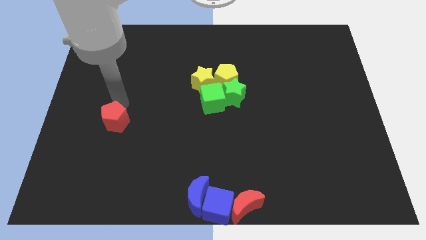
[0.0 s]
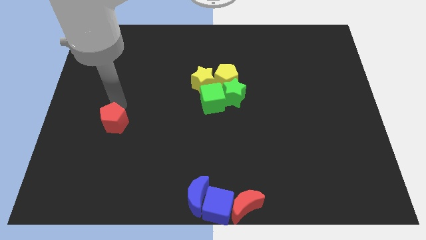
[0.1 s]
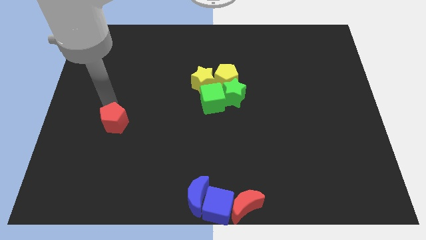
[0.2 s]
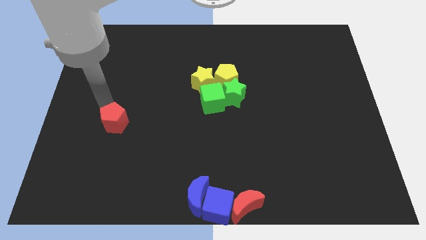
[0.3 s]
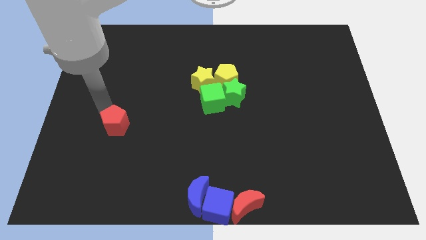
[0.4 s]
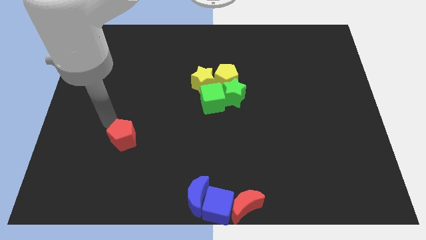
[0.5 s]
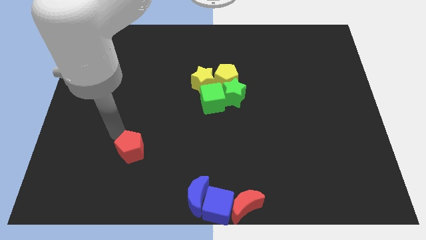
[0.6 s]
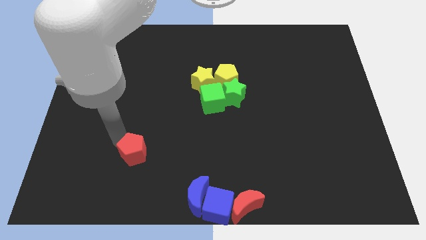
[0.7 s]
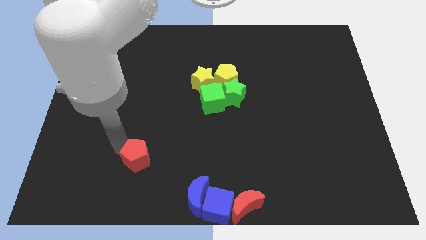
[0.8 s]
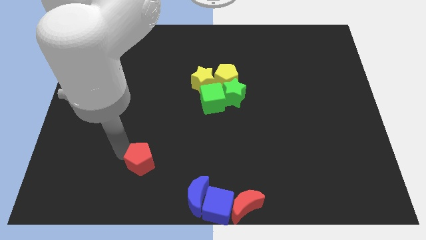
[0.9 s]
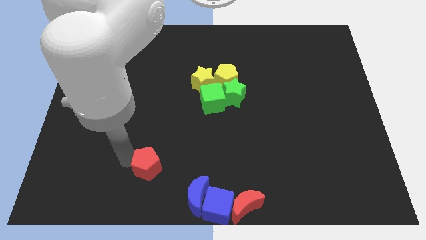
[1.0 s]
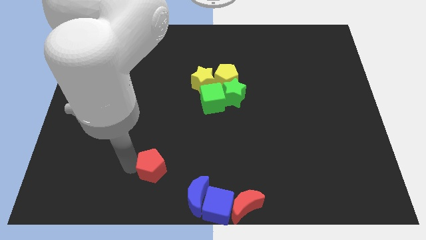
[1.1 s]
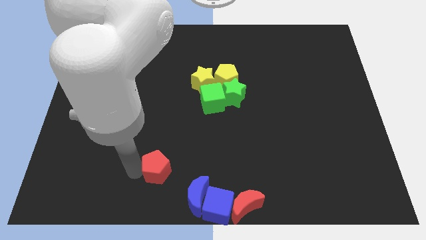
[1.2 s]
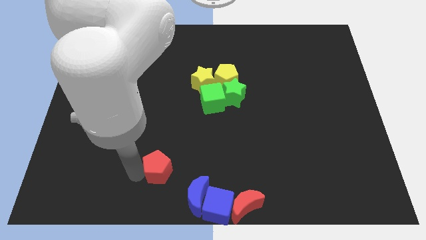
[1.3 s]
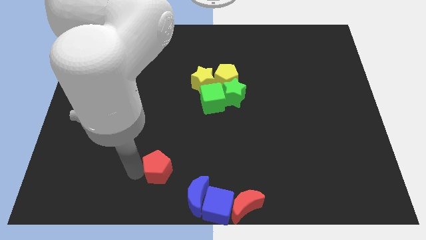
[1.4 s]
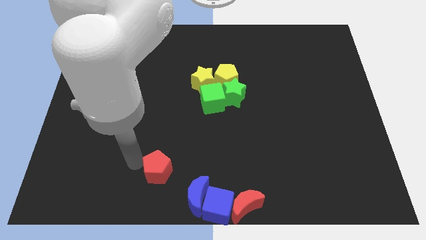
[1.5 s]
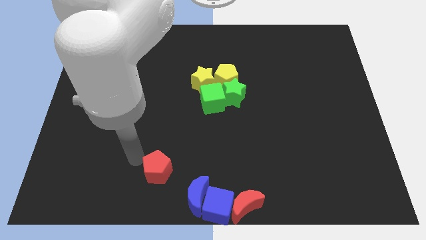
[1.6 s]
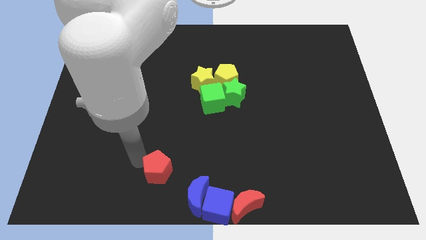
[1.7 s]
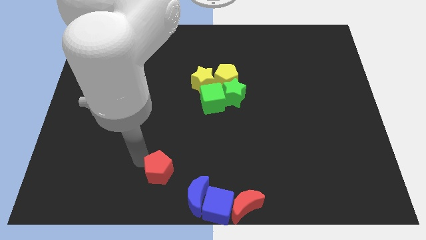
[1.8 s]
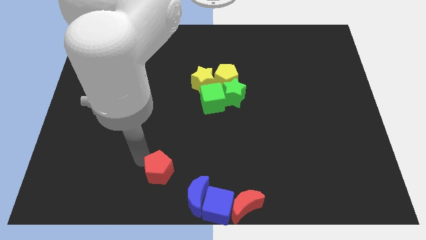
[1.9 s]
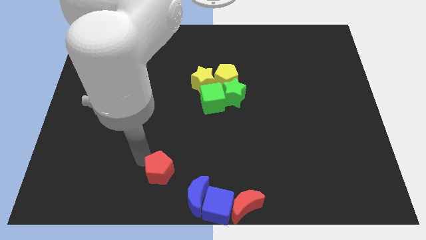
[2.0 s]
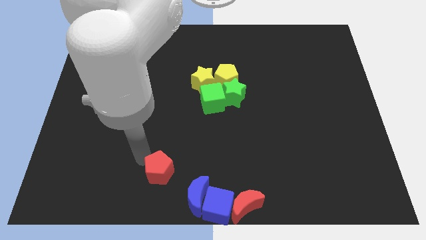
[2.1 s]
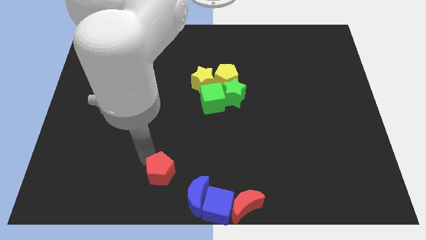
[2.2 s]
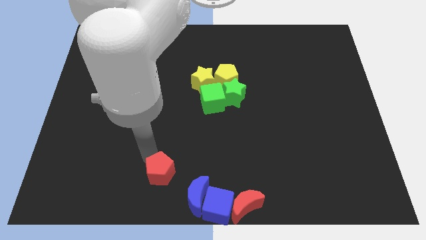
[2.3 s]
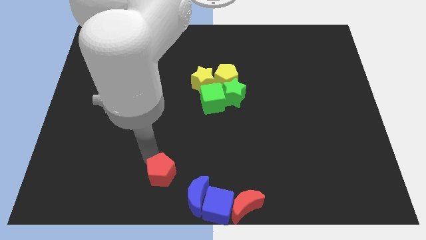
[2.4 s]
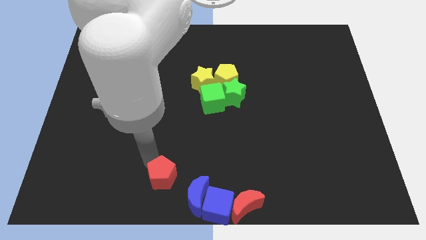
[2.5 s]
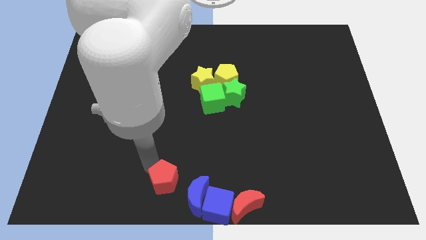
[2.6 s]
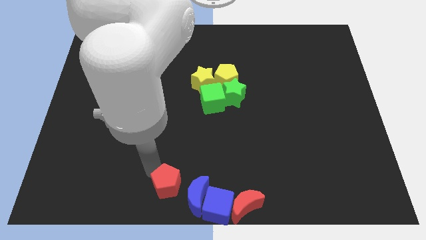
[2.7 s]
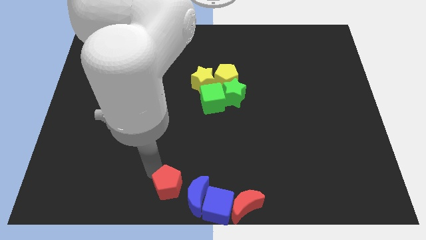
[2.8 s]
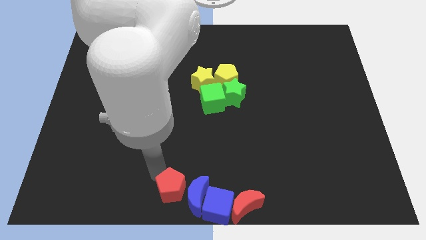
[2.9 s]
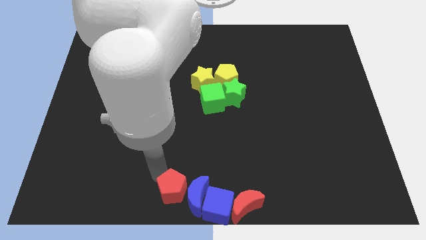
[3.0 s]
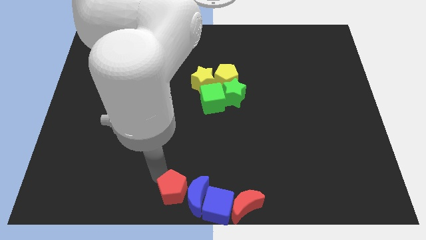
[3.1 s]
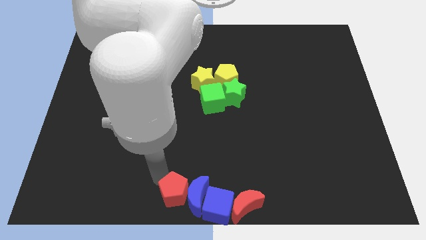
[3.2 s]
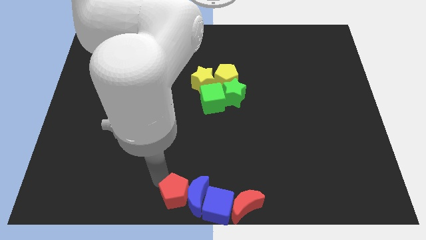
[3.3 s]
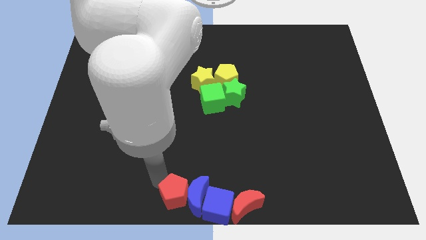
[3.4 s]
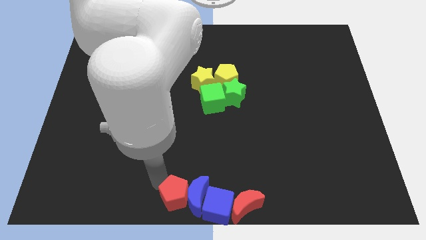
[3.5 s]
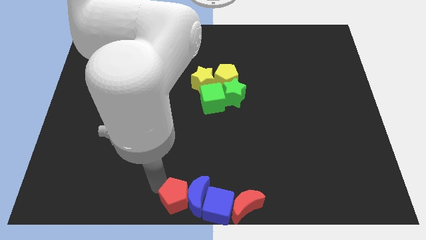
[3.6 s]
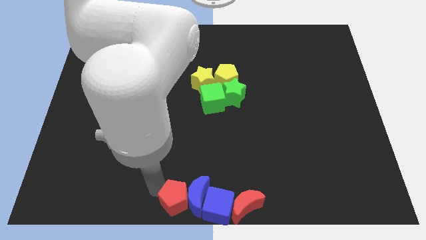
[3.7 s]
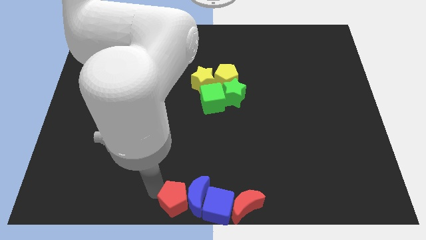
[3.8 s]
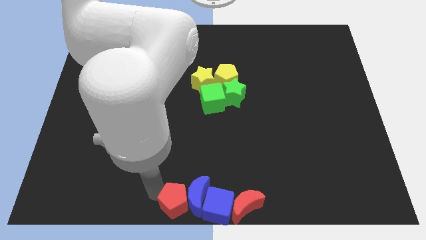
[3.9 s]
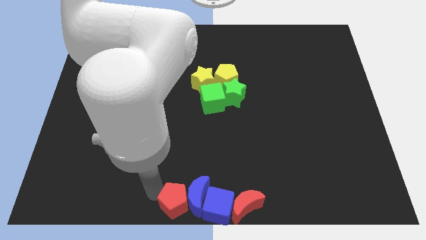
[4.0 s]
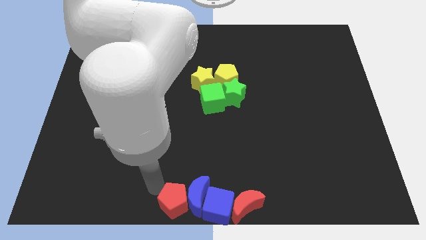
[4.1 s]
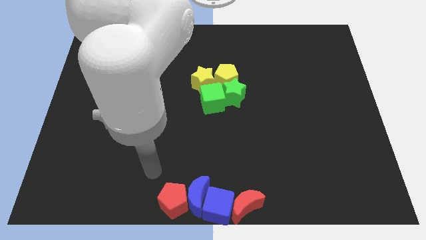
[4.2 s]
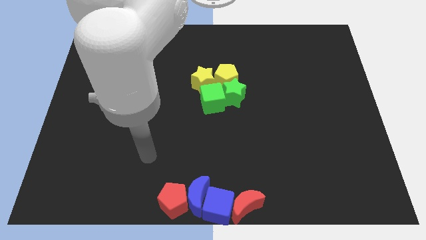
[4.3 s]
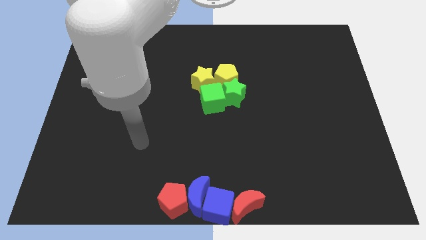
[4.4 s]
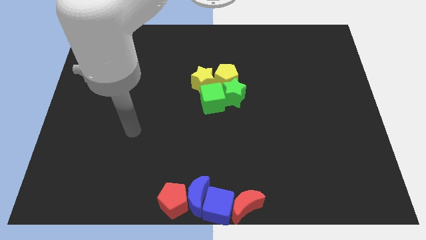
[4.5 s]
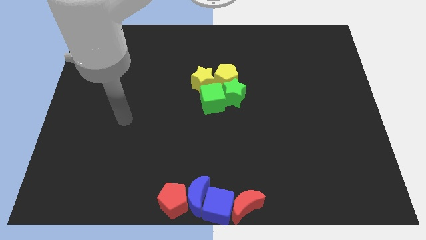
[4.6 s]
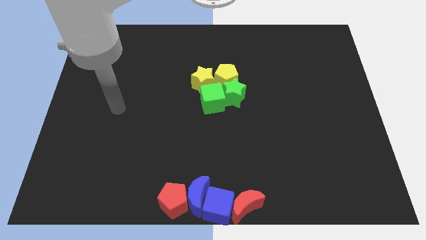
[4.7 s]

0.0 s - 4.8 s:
place the red pentagon close to the group of blue blocks

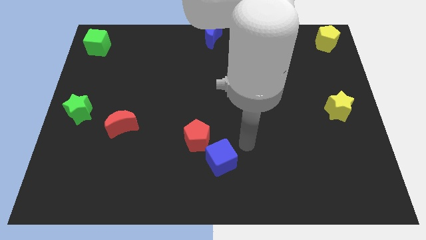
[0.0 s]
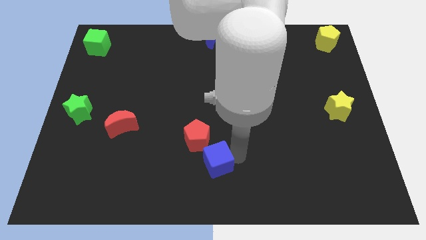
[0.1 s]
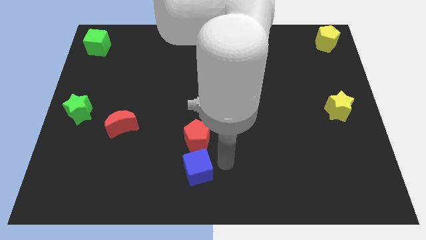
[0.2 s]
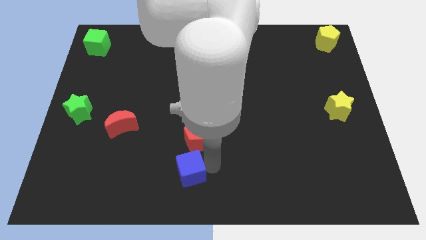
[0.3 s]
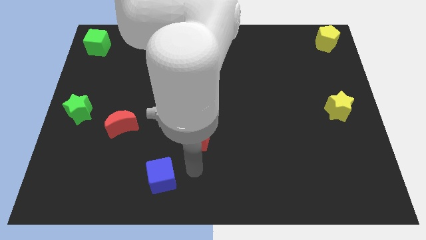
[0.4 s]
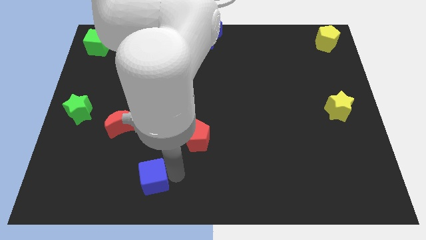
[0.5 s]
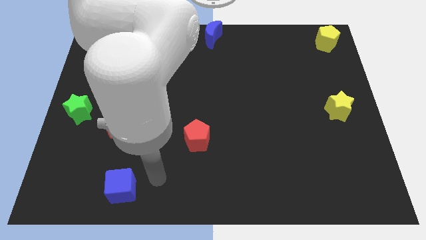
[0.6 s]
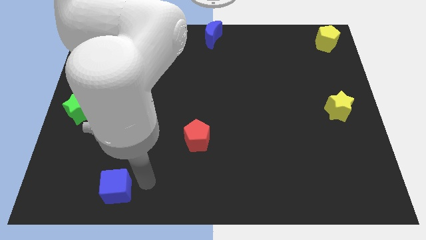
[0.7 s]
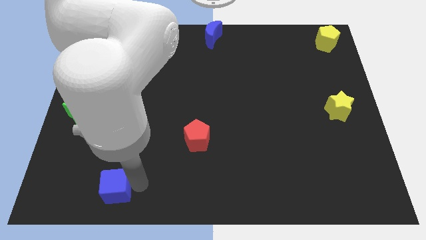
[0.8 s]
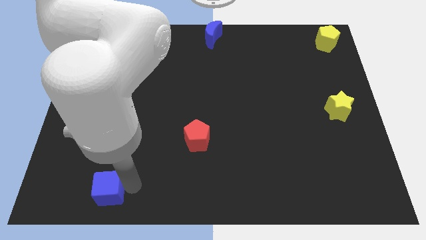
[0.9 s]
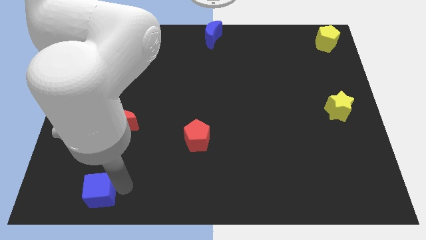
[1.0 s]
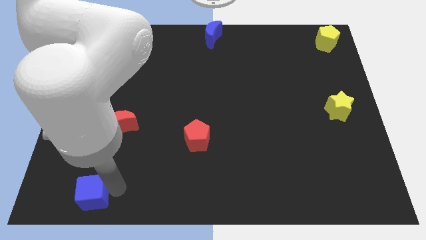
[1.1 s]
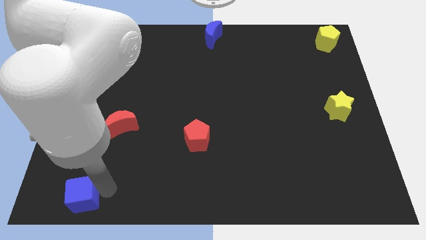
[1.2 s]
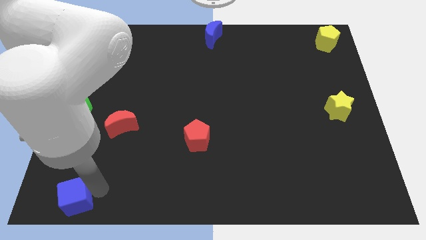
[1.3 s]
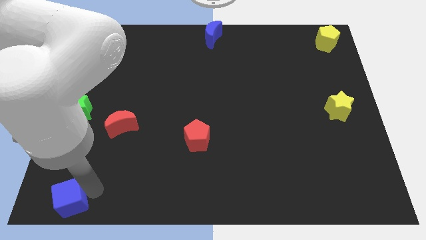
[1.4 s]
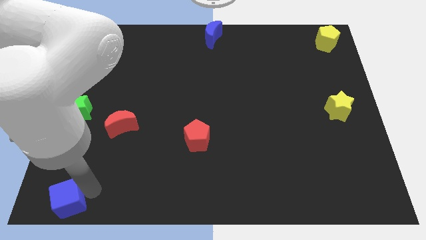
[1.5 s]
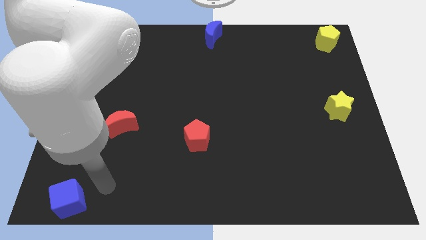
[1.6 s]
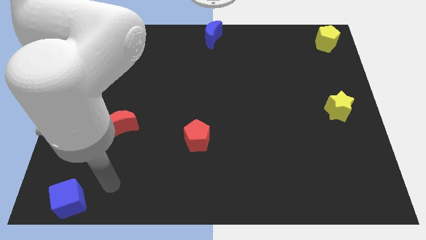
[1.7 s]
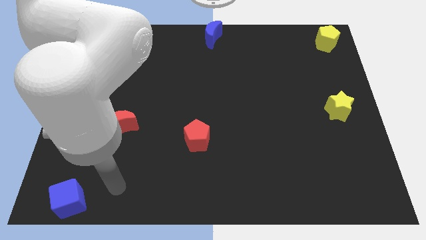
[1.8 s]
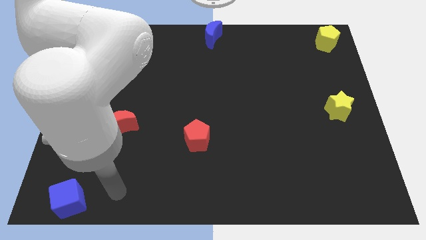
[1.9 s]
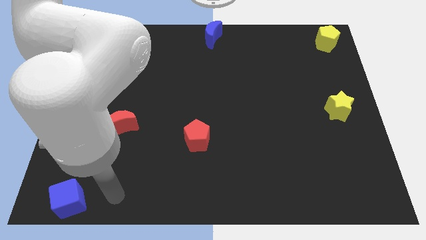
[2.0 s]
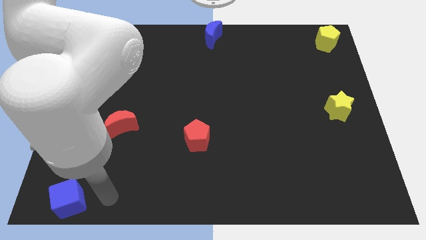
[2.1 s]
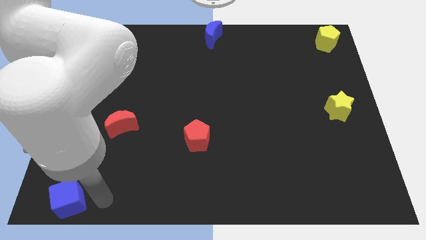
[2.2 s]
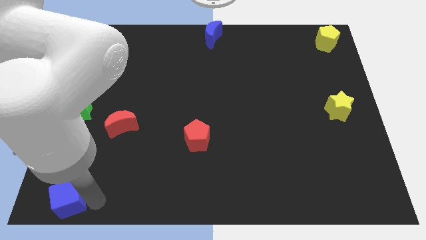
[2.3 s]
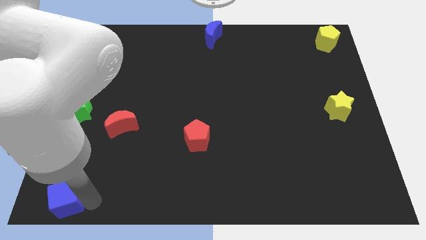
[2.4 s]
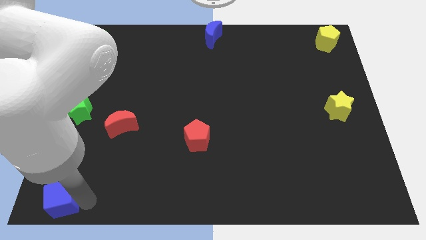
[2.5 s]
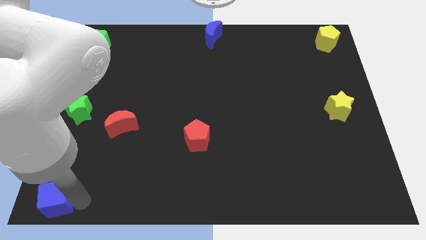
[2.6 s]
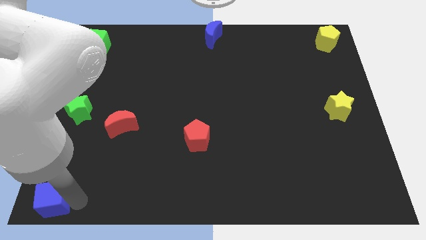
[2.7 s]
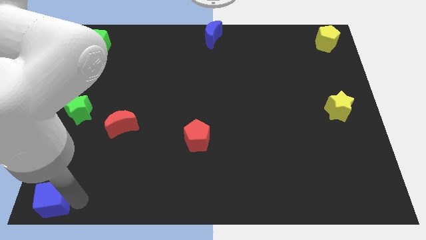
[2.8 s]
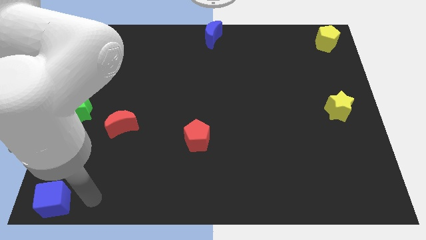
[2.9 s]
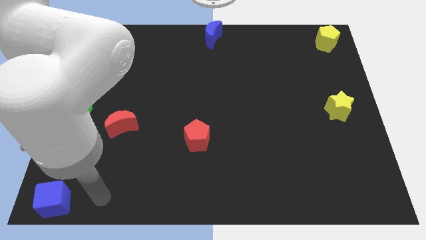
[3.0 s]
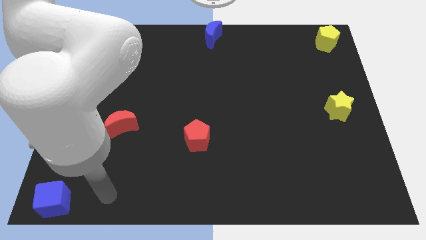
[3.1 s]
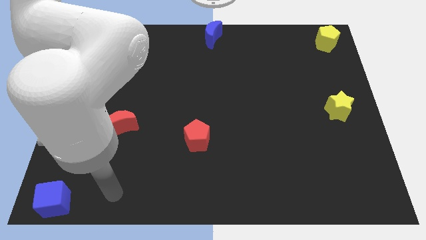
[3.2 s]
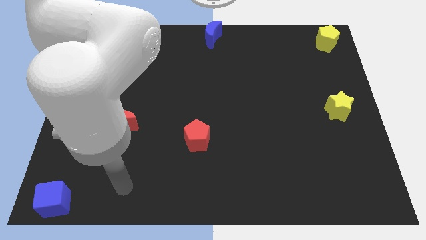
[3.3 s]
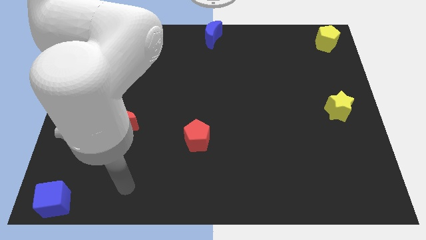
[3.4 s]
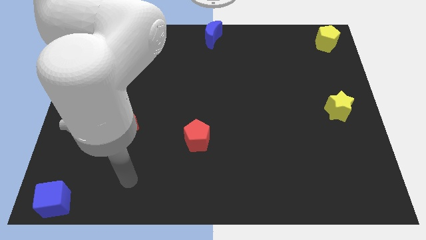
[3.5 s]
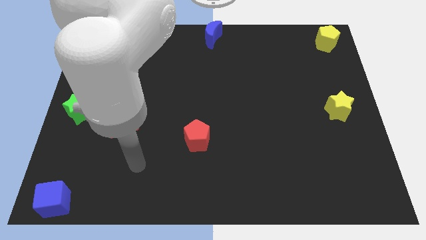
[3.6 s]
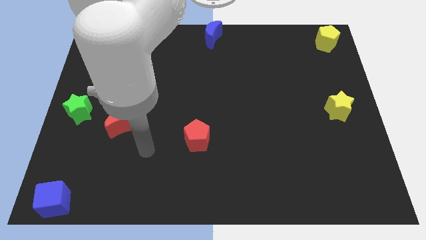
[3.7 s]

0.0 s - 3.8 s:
place blue cube at the bottom left corner of the board

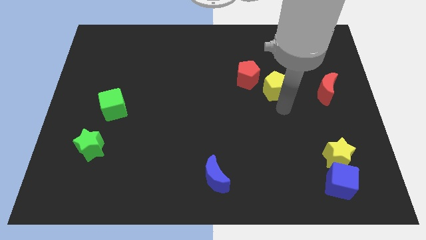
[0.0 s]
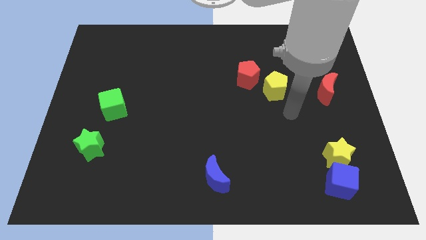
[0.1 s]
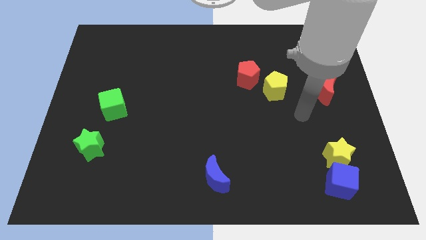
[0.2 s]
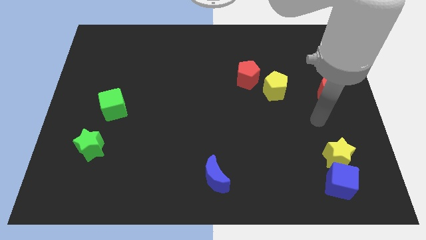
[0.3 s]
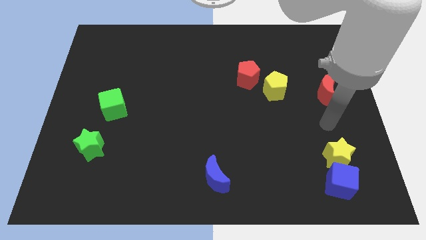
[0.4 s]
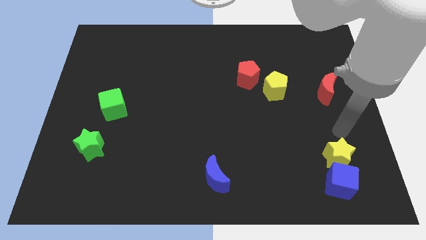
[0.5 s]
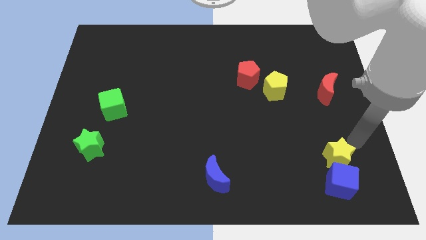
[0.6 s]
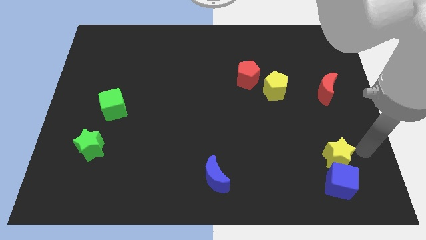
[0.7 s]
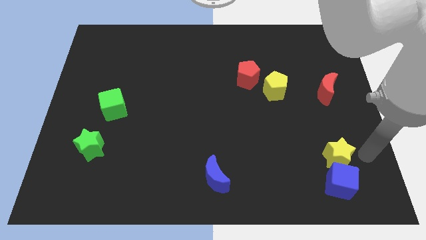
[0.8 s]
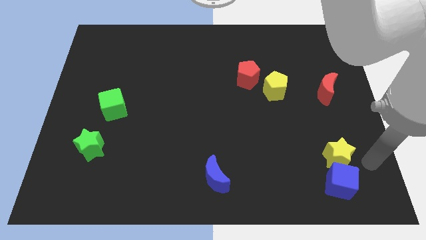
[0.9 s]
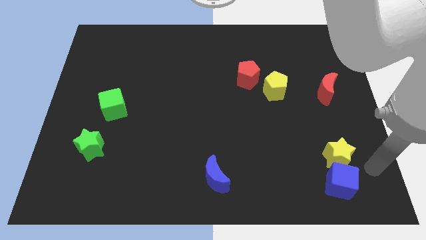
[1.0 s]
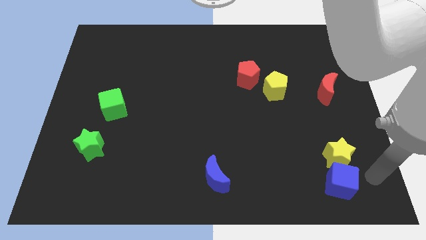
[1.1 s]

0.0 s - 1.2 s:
move the arm away from the yellow pentagon
